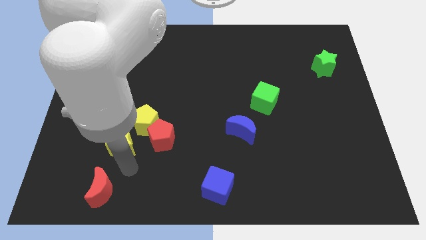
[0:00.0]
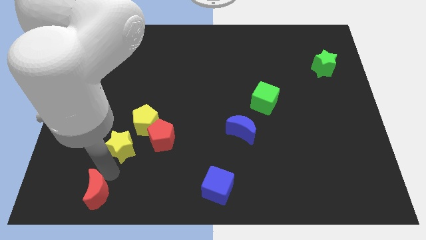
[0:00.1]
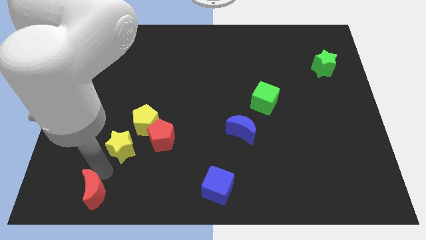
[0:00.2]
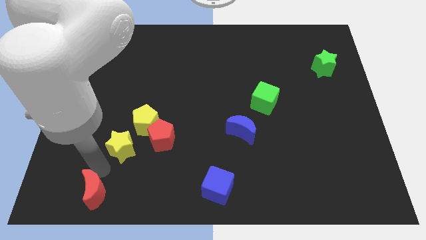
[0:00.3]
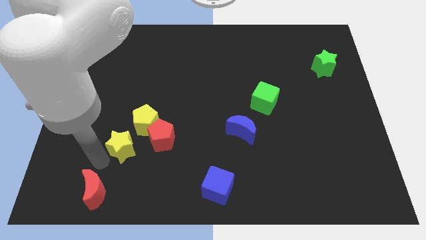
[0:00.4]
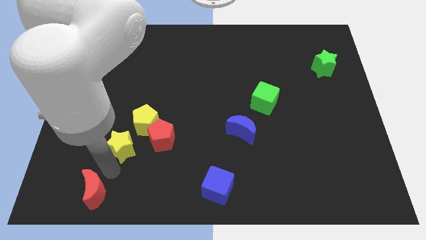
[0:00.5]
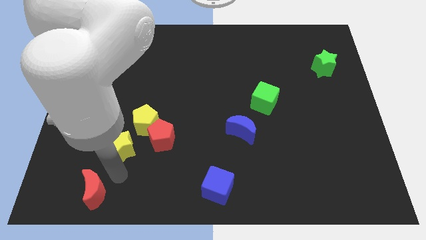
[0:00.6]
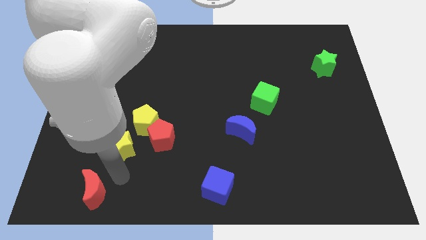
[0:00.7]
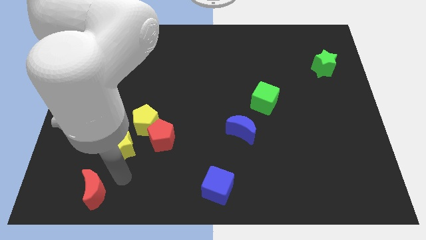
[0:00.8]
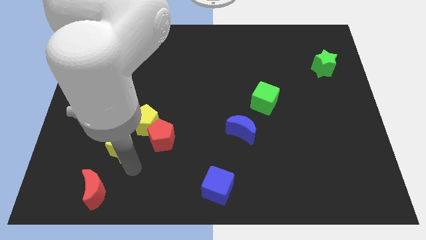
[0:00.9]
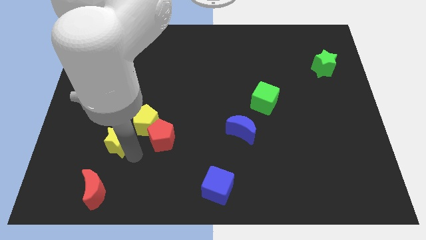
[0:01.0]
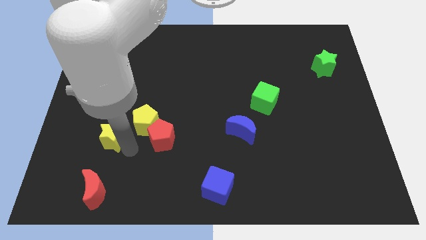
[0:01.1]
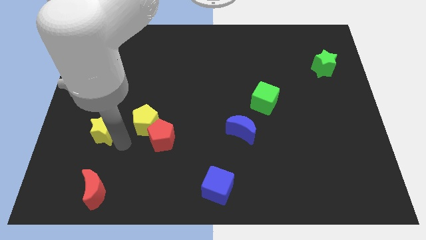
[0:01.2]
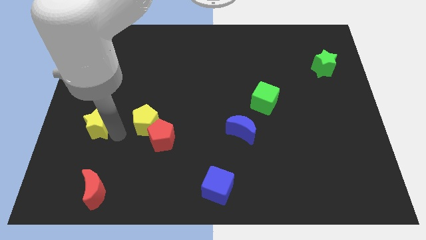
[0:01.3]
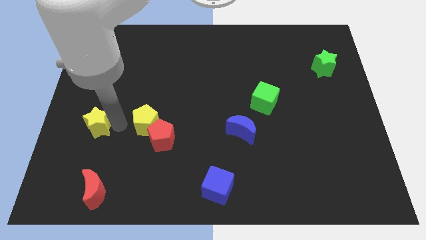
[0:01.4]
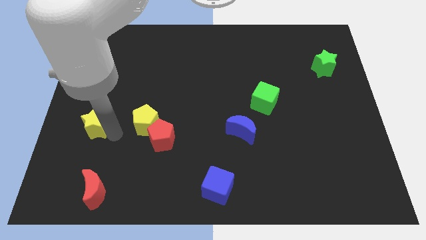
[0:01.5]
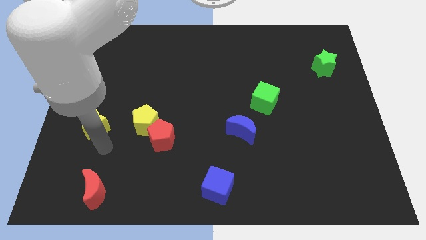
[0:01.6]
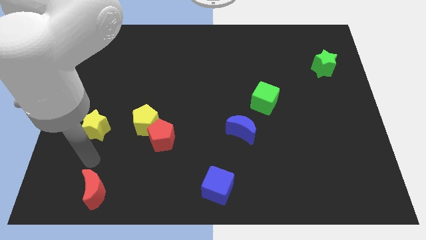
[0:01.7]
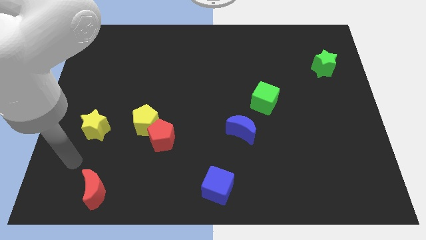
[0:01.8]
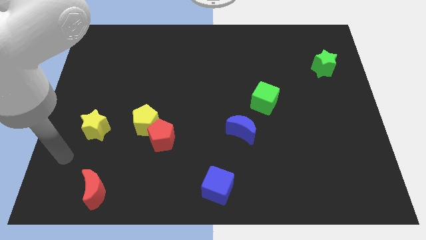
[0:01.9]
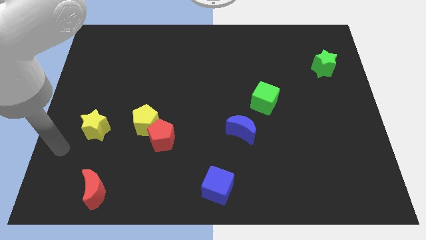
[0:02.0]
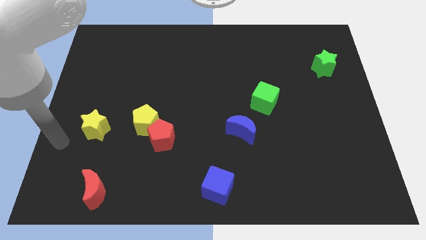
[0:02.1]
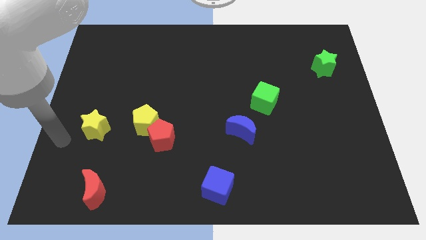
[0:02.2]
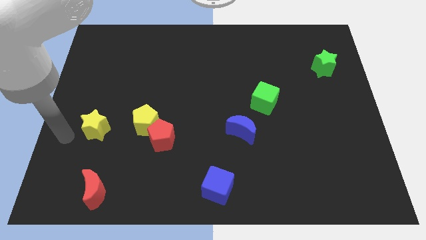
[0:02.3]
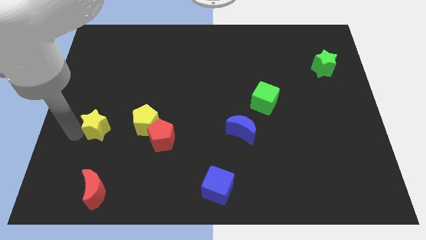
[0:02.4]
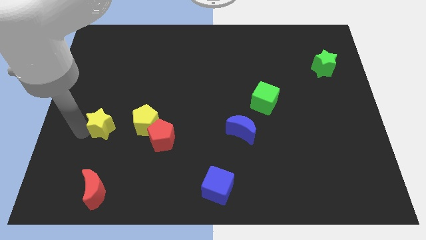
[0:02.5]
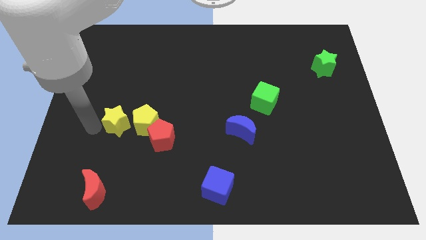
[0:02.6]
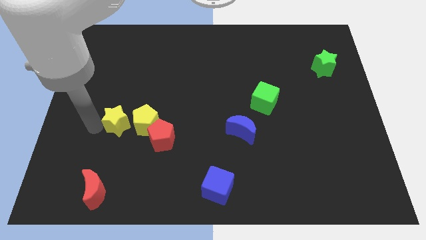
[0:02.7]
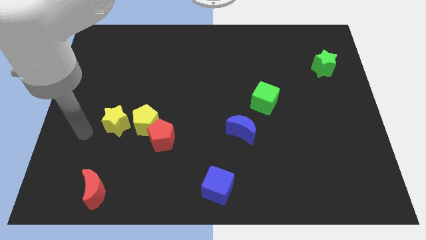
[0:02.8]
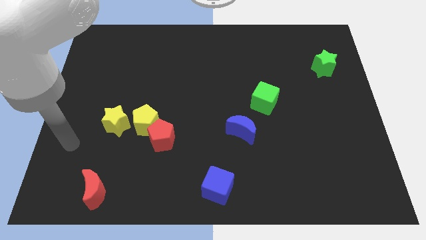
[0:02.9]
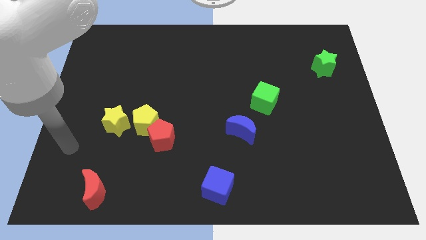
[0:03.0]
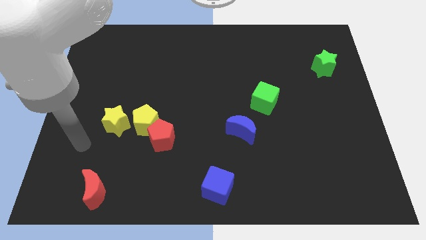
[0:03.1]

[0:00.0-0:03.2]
move the yellow star to the left of the yellow pentagon

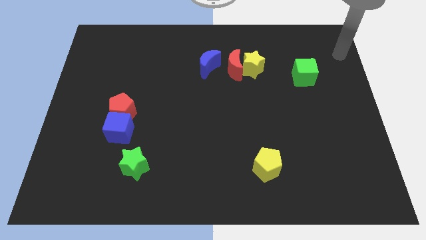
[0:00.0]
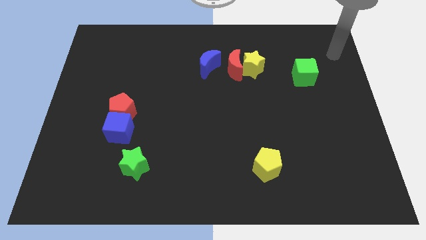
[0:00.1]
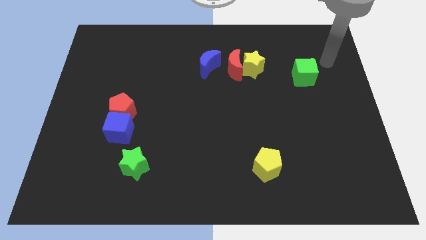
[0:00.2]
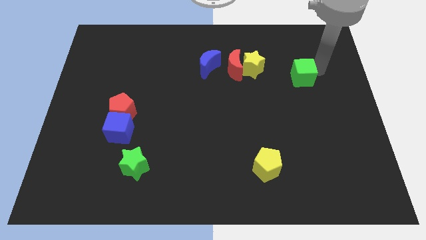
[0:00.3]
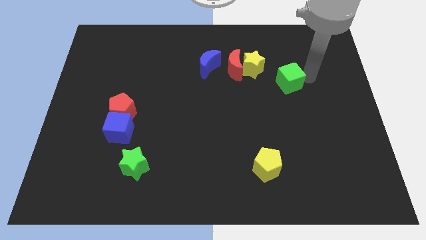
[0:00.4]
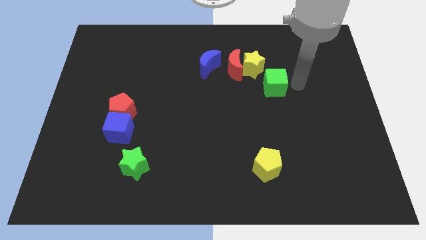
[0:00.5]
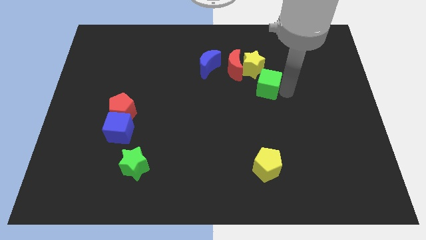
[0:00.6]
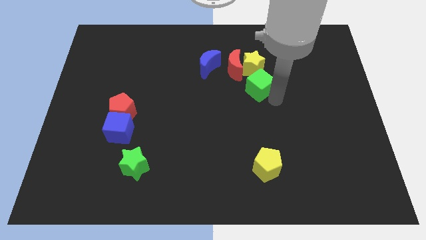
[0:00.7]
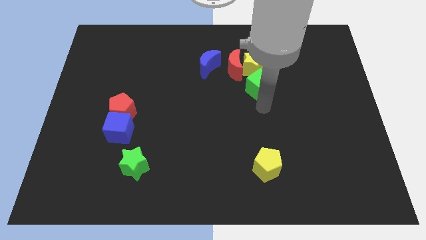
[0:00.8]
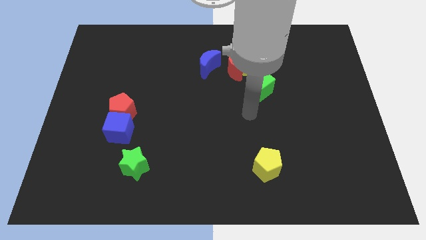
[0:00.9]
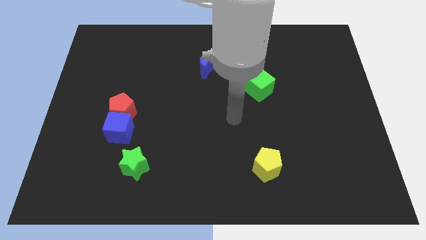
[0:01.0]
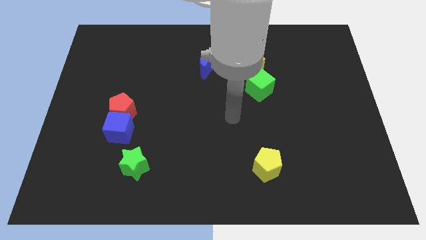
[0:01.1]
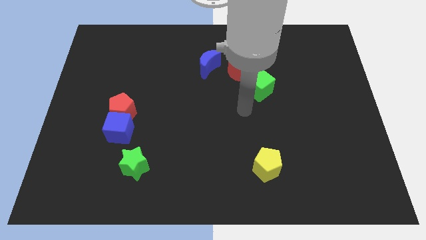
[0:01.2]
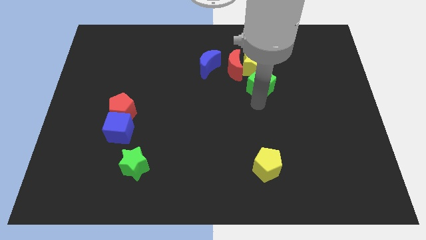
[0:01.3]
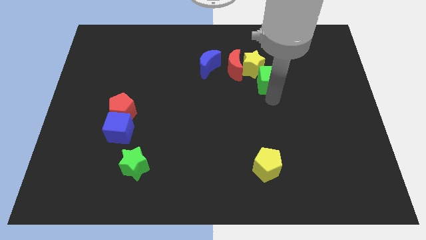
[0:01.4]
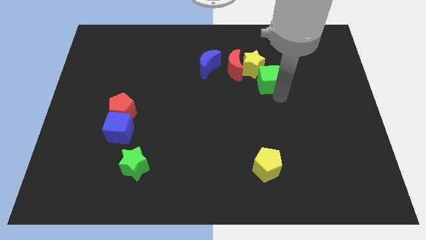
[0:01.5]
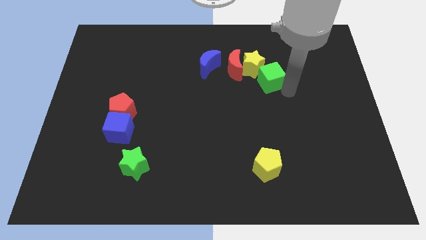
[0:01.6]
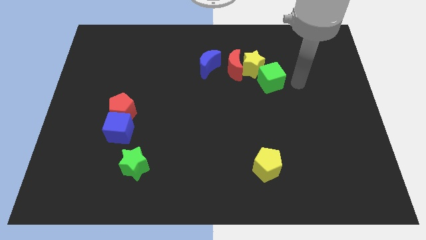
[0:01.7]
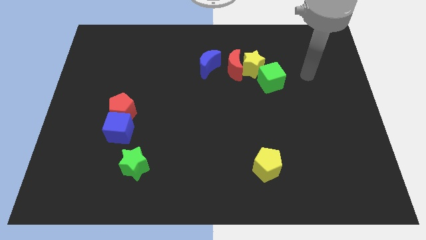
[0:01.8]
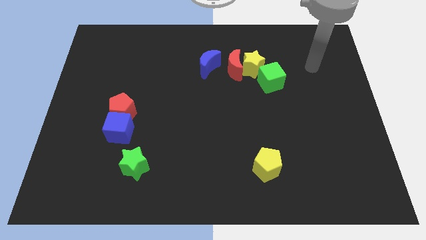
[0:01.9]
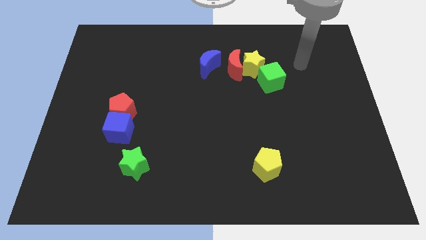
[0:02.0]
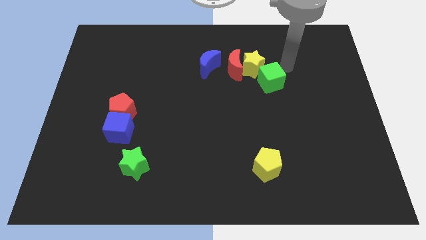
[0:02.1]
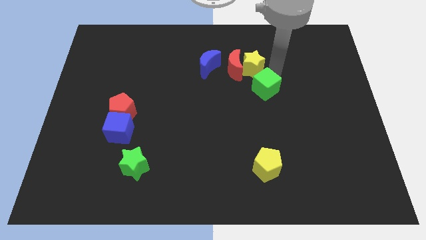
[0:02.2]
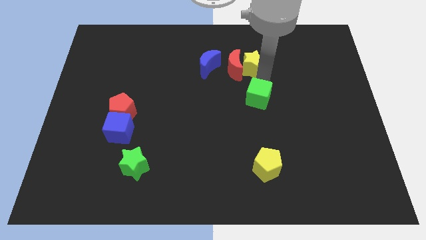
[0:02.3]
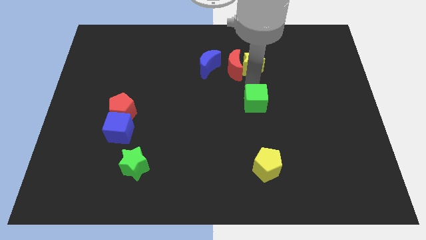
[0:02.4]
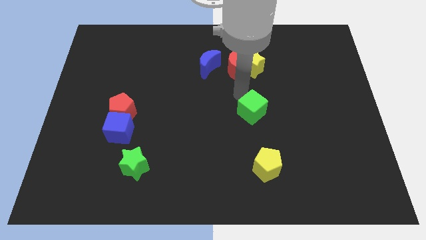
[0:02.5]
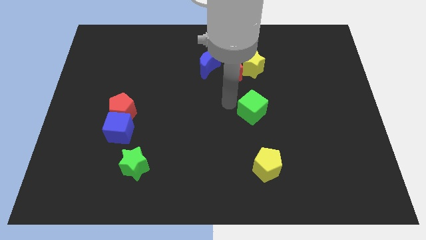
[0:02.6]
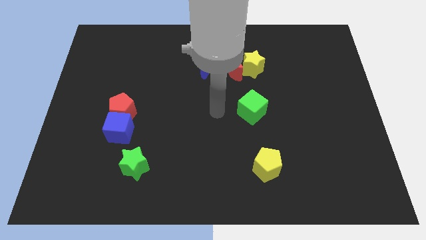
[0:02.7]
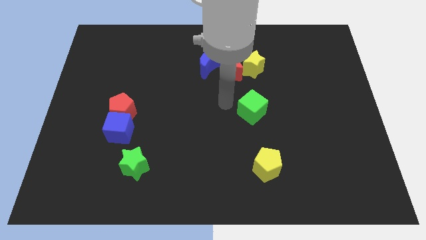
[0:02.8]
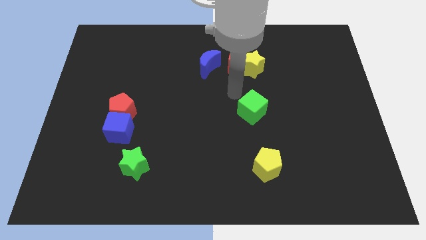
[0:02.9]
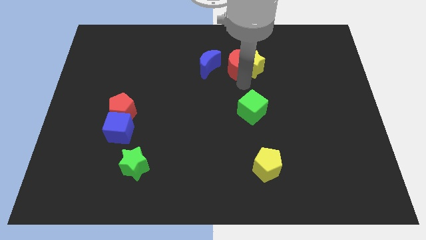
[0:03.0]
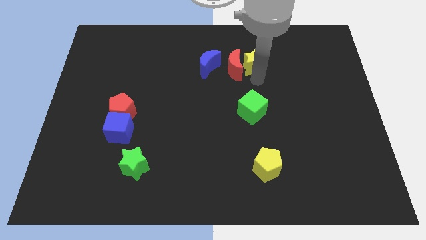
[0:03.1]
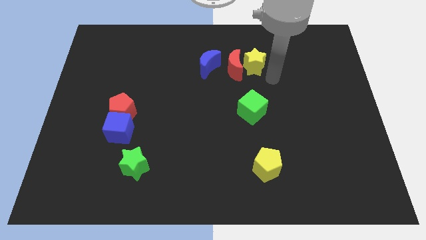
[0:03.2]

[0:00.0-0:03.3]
move the green cube in between the yellow blocks

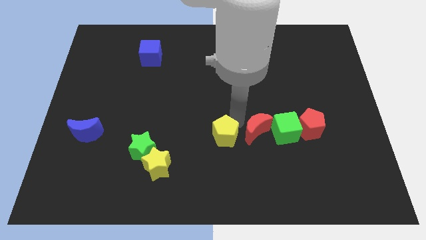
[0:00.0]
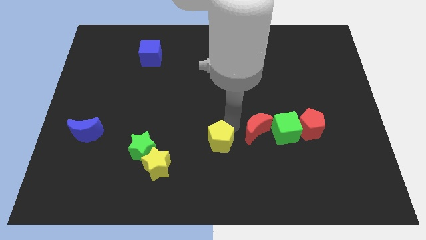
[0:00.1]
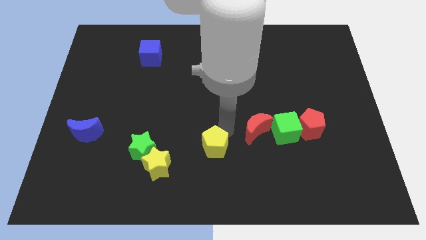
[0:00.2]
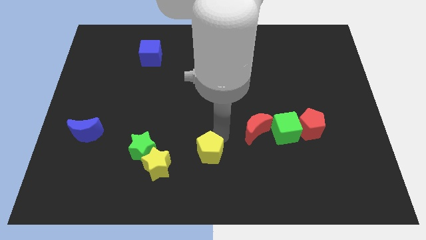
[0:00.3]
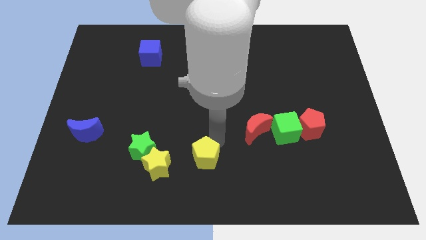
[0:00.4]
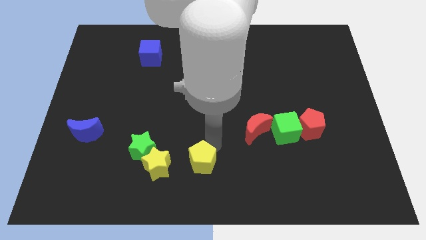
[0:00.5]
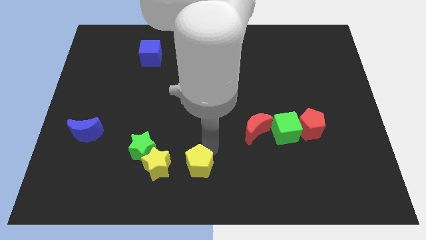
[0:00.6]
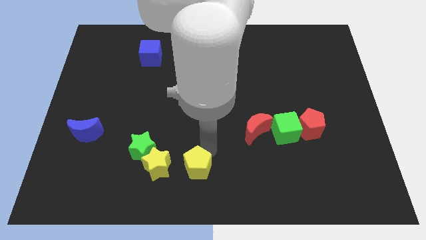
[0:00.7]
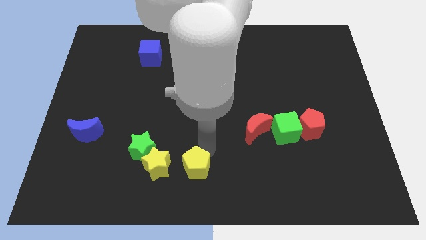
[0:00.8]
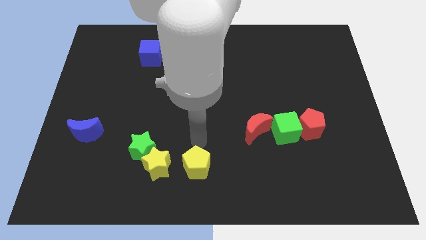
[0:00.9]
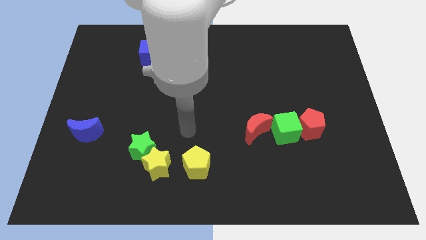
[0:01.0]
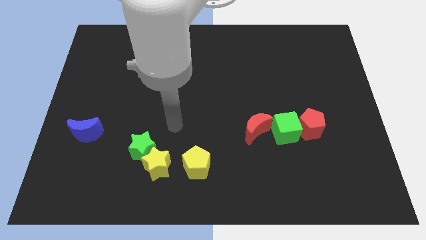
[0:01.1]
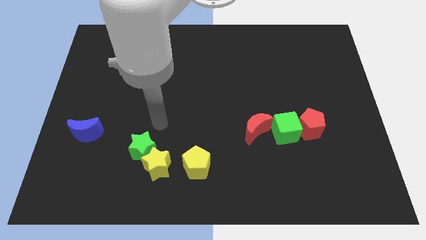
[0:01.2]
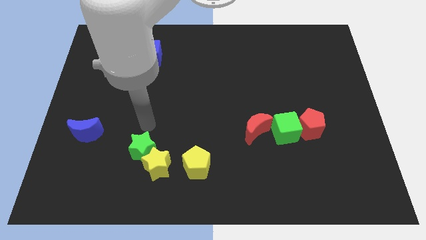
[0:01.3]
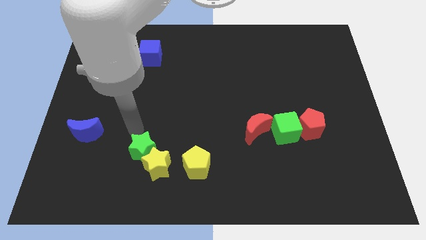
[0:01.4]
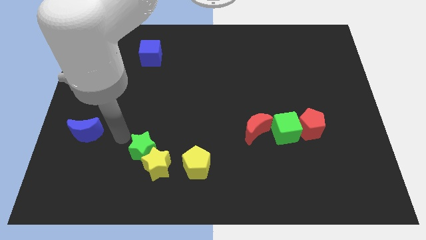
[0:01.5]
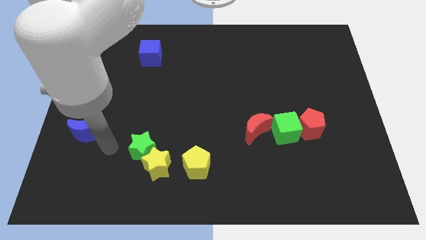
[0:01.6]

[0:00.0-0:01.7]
drag the yellow pentagon towards the yellow star

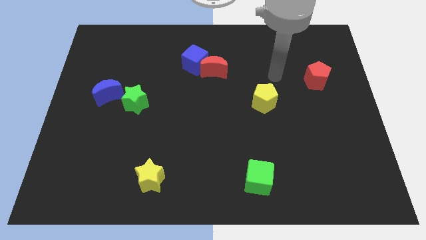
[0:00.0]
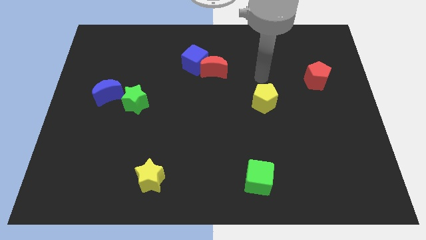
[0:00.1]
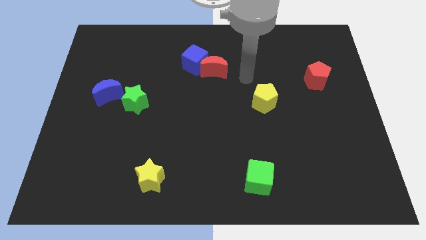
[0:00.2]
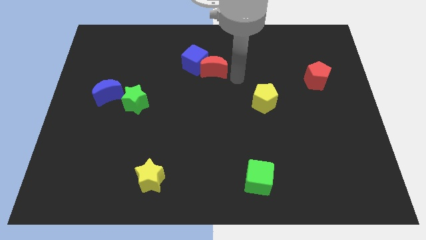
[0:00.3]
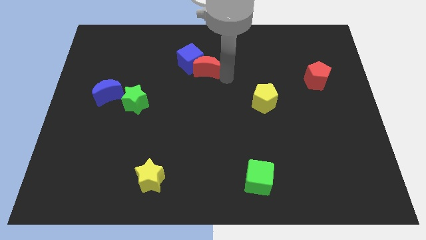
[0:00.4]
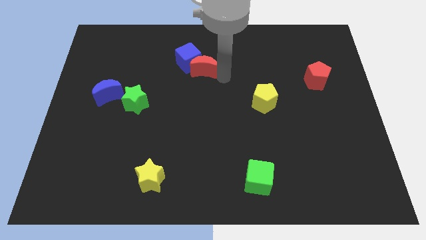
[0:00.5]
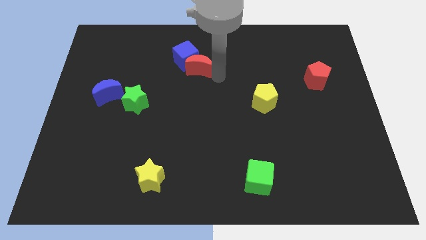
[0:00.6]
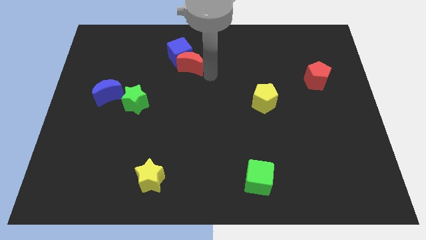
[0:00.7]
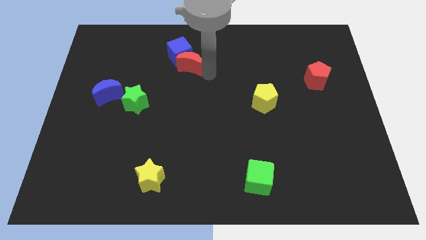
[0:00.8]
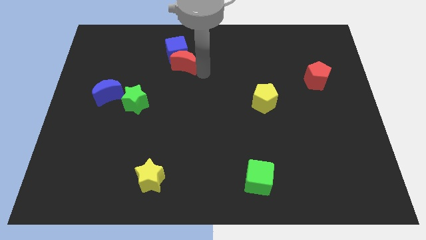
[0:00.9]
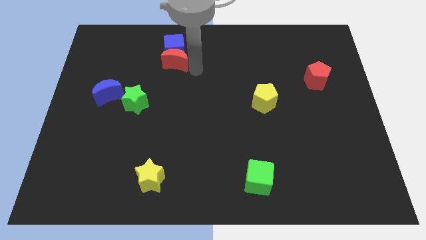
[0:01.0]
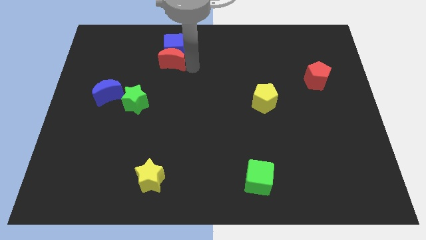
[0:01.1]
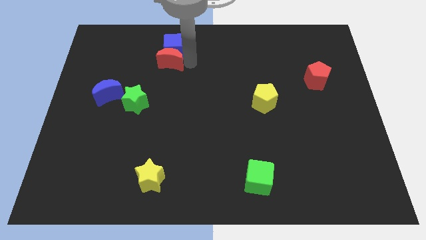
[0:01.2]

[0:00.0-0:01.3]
place the red crescent below the blue cube
